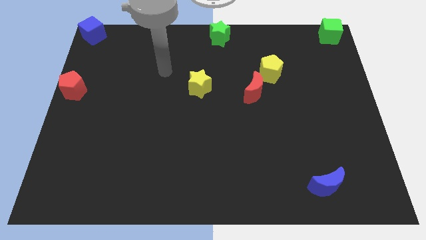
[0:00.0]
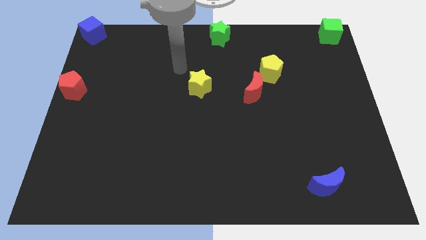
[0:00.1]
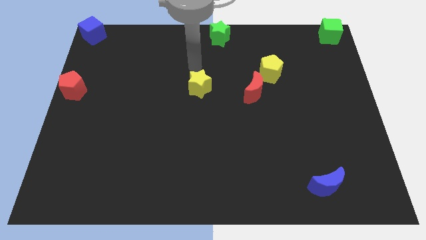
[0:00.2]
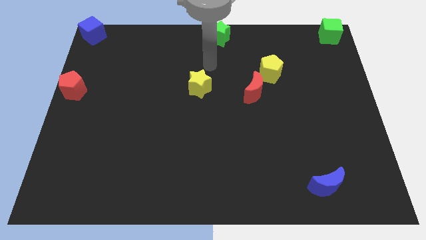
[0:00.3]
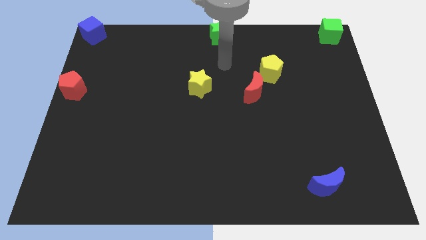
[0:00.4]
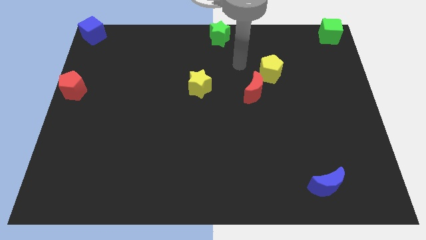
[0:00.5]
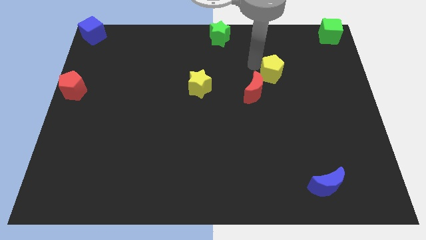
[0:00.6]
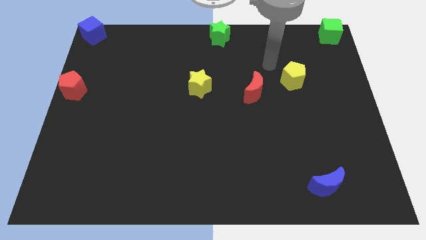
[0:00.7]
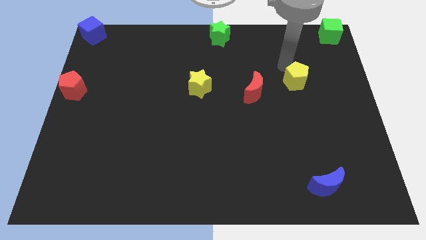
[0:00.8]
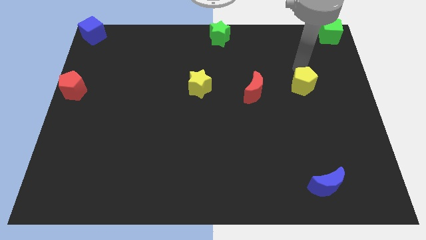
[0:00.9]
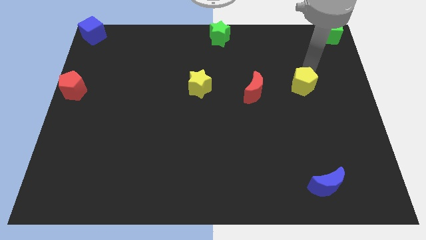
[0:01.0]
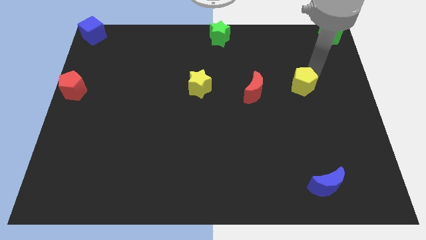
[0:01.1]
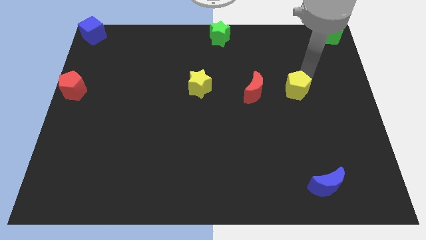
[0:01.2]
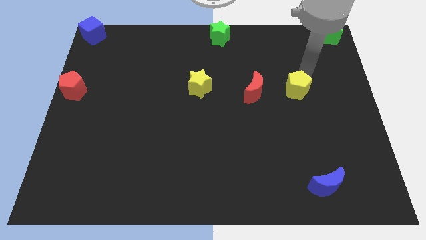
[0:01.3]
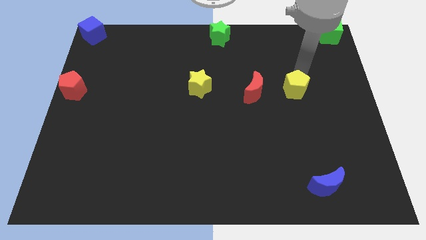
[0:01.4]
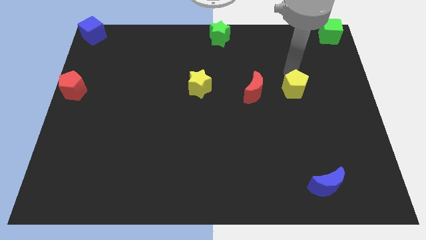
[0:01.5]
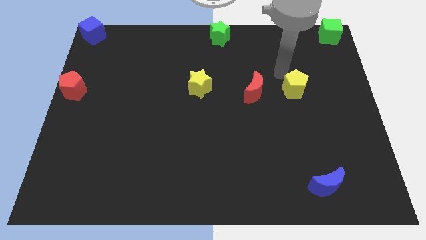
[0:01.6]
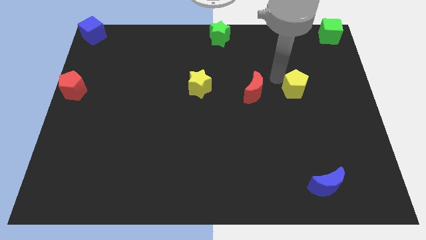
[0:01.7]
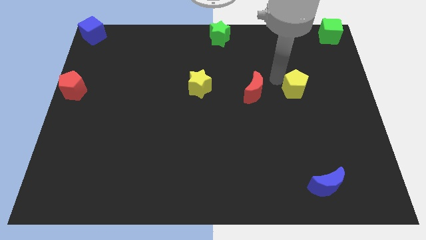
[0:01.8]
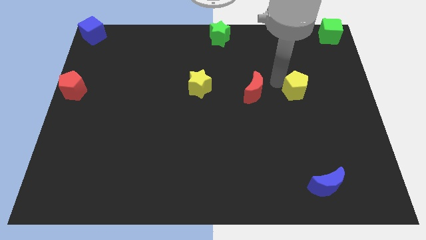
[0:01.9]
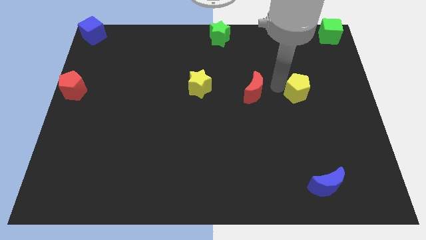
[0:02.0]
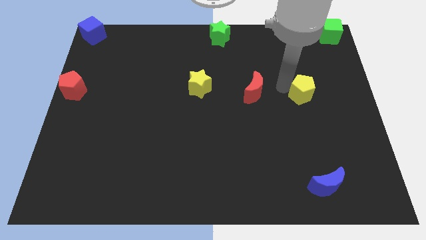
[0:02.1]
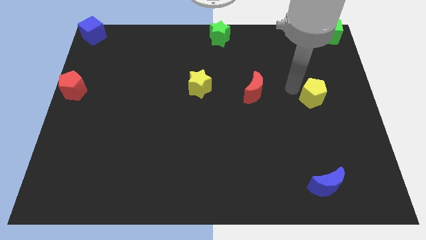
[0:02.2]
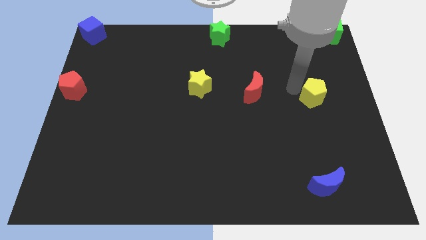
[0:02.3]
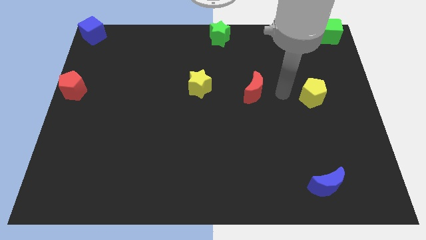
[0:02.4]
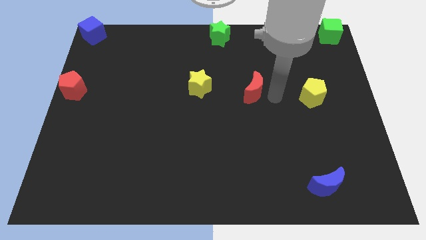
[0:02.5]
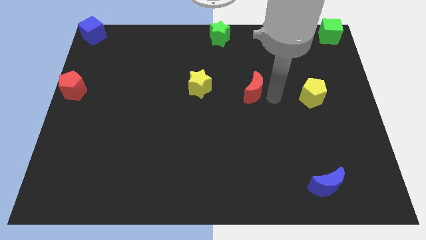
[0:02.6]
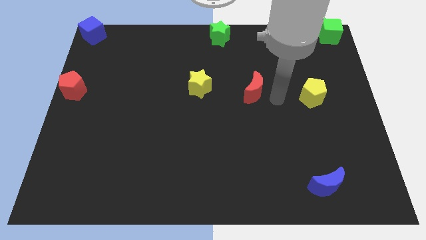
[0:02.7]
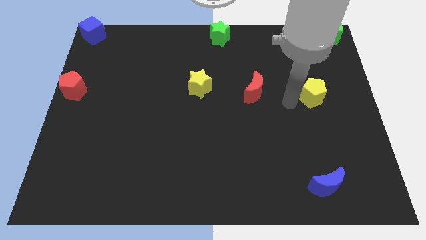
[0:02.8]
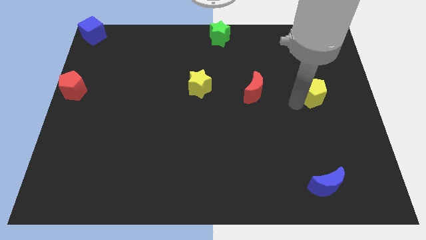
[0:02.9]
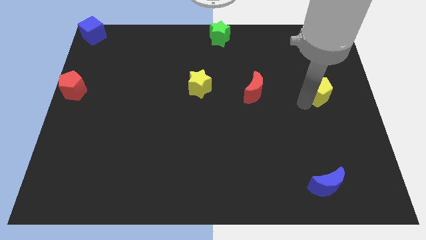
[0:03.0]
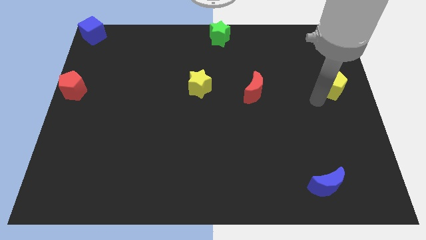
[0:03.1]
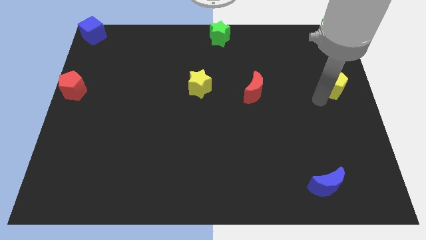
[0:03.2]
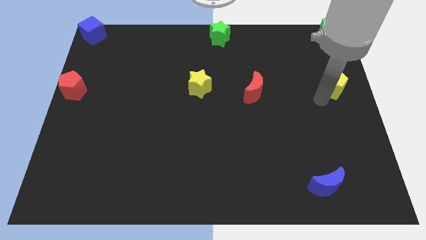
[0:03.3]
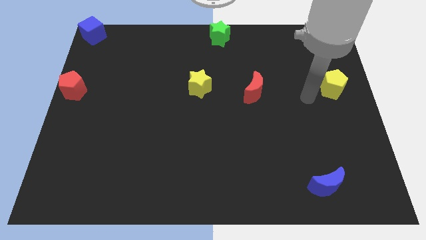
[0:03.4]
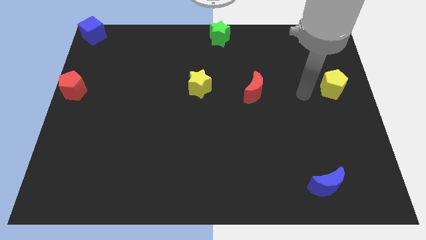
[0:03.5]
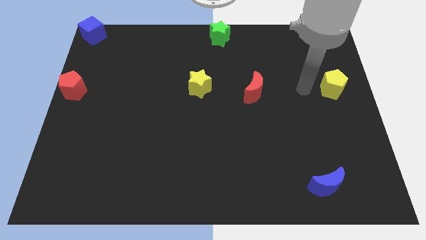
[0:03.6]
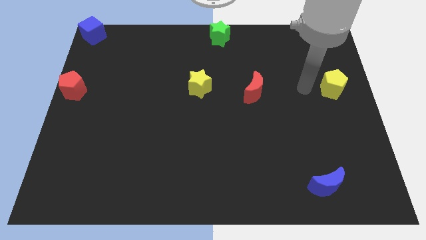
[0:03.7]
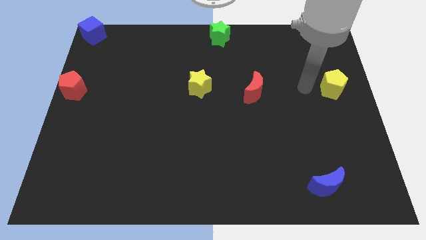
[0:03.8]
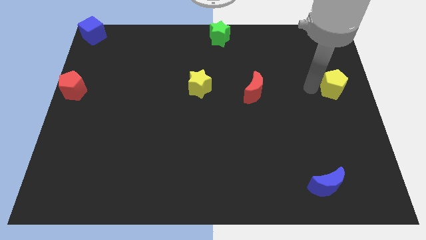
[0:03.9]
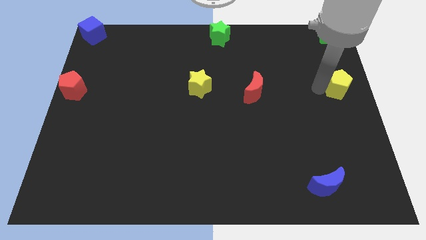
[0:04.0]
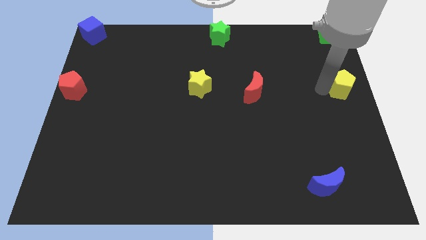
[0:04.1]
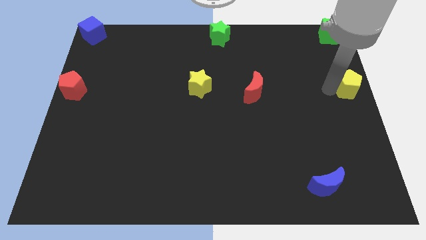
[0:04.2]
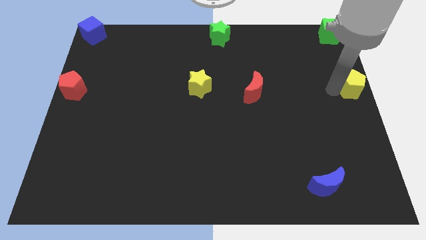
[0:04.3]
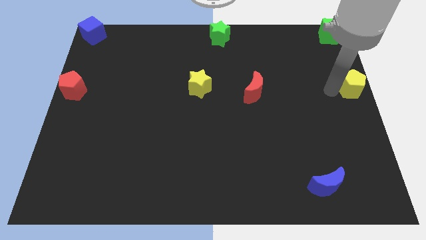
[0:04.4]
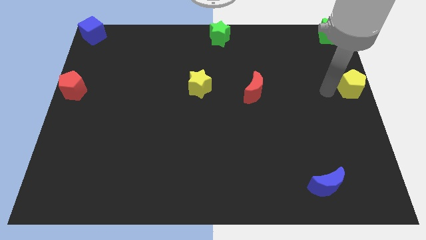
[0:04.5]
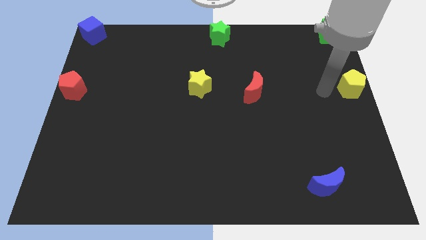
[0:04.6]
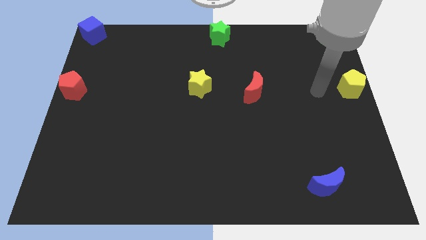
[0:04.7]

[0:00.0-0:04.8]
move the yellow pentagon to the center right of the board

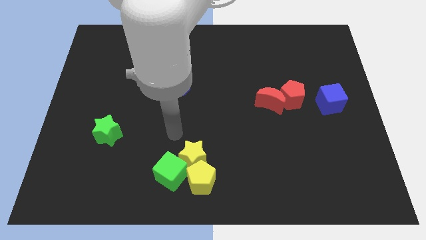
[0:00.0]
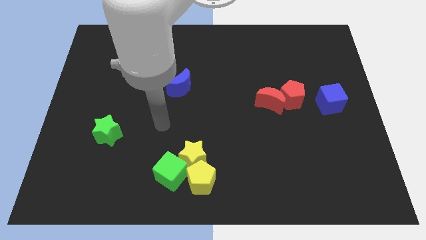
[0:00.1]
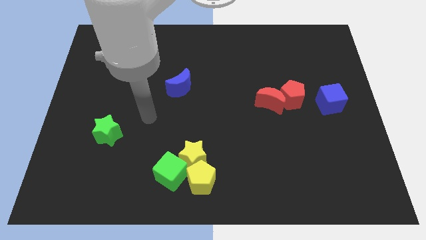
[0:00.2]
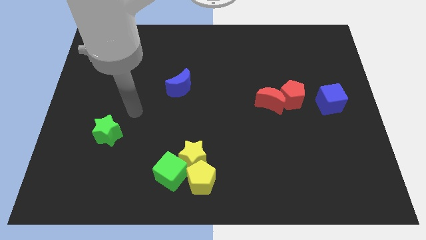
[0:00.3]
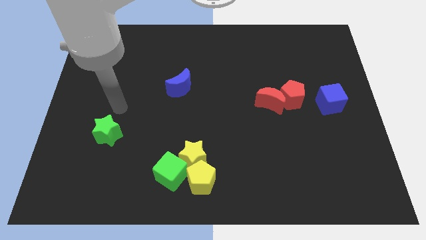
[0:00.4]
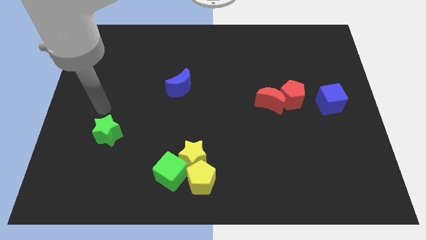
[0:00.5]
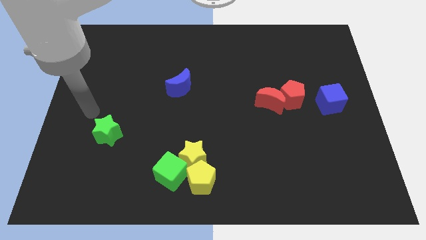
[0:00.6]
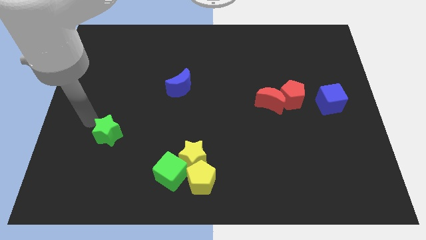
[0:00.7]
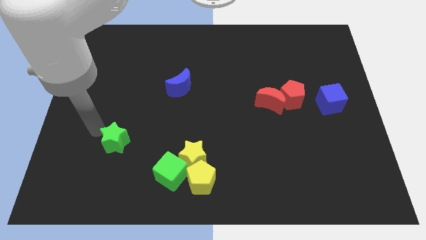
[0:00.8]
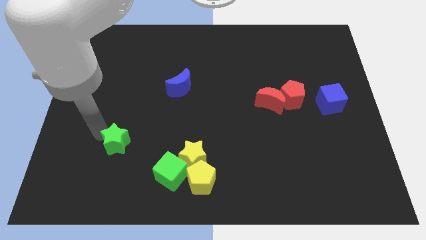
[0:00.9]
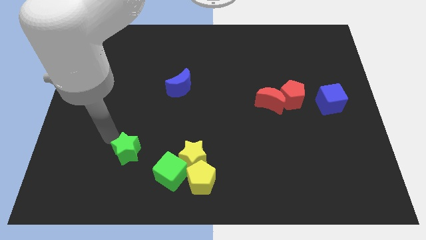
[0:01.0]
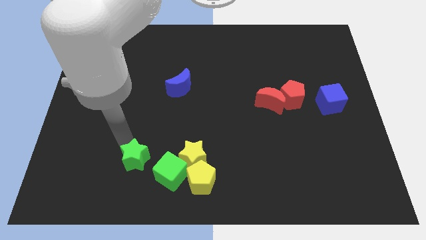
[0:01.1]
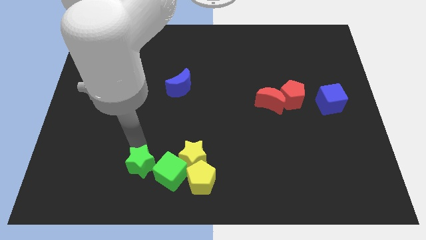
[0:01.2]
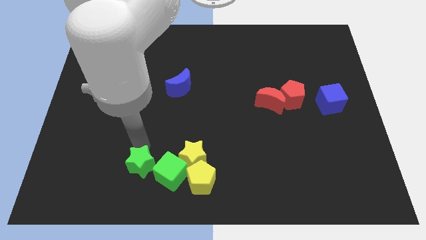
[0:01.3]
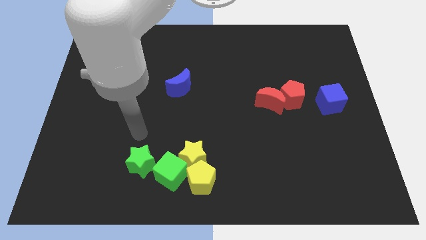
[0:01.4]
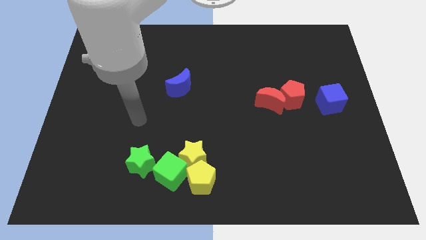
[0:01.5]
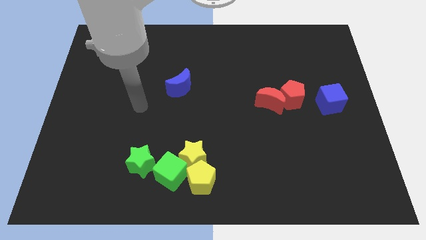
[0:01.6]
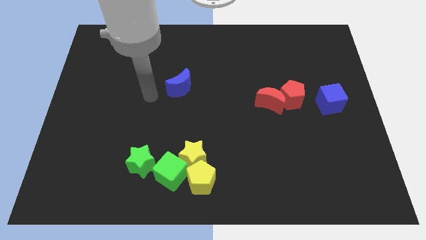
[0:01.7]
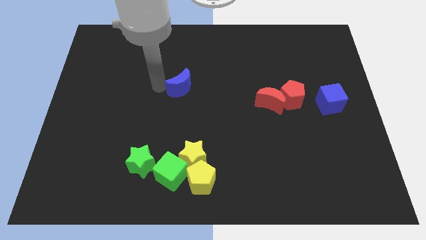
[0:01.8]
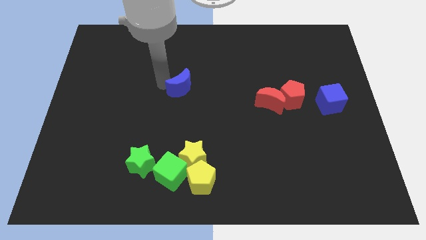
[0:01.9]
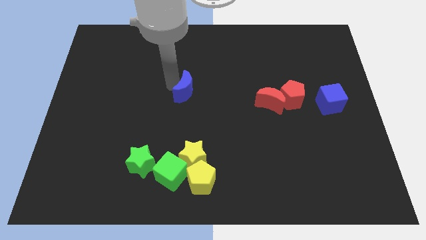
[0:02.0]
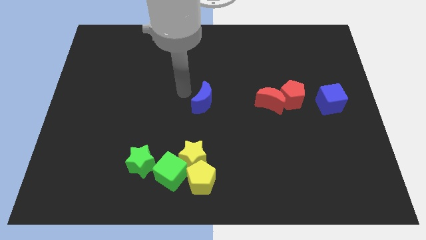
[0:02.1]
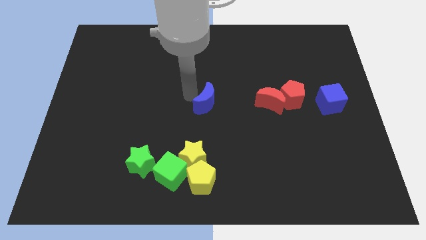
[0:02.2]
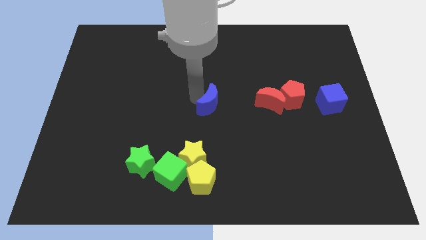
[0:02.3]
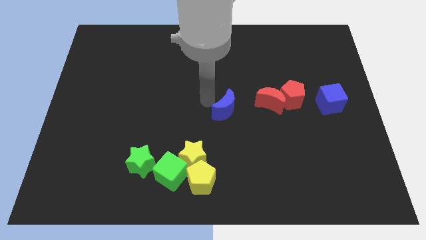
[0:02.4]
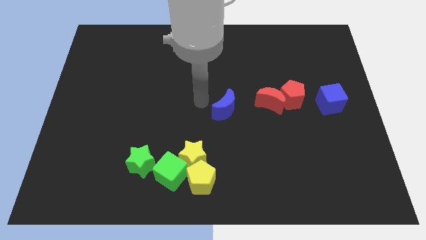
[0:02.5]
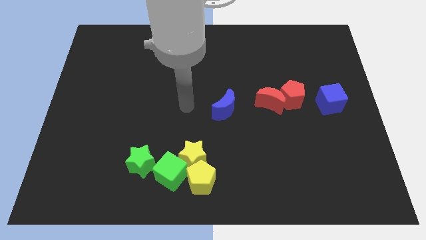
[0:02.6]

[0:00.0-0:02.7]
push green star and blue crescent to the right of the board

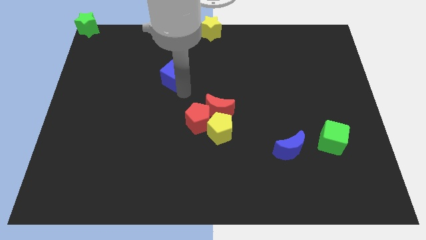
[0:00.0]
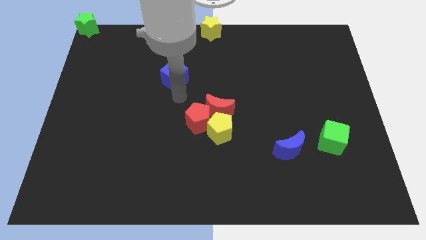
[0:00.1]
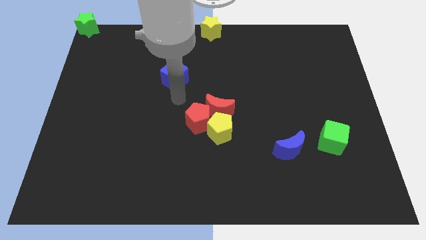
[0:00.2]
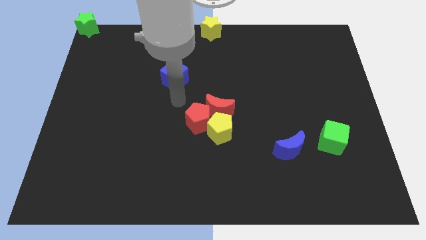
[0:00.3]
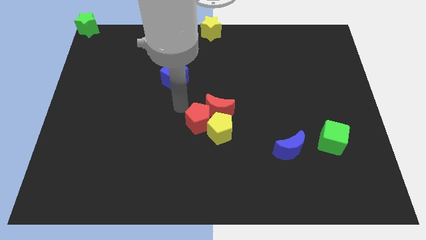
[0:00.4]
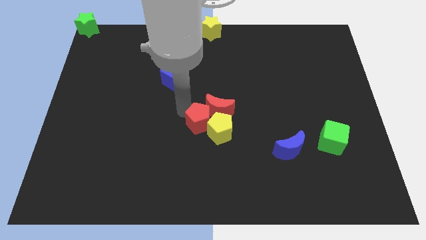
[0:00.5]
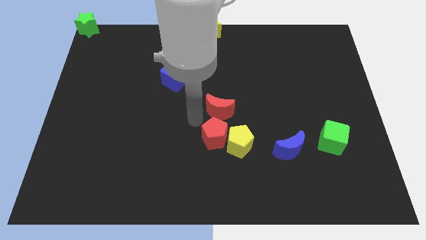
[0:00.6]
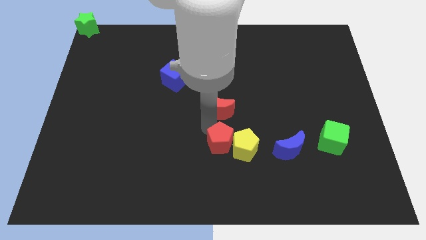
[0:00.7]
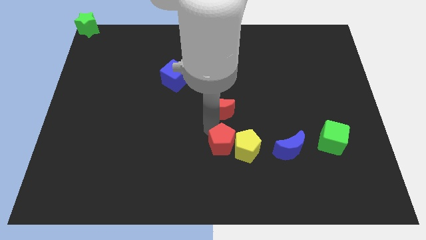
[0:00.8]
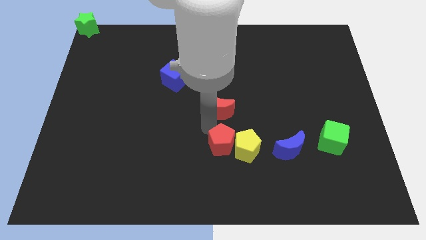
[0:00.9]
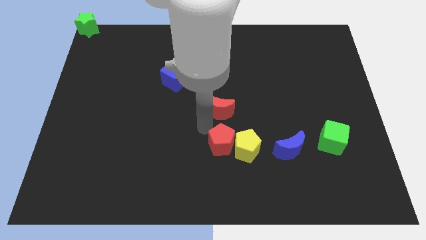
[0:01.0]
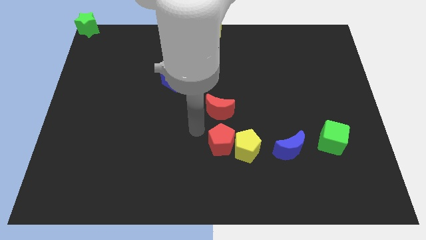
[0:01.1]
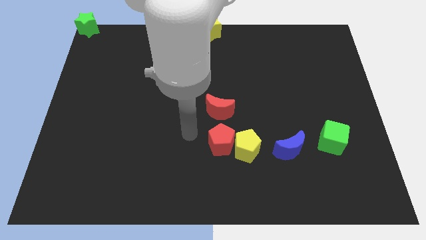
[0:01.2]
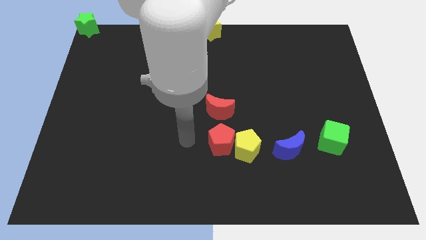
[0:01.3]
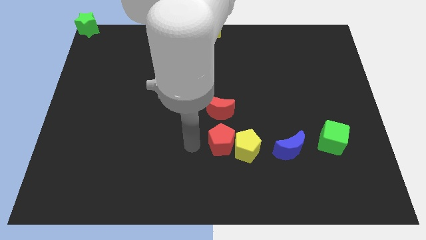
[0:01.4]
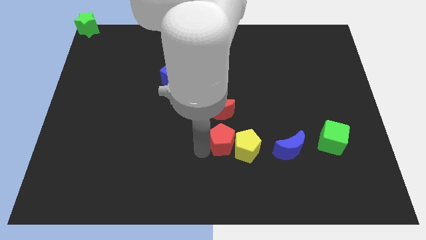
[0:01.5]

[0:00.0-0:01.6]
slide the red pentagon with yellow pentagon towards the blue crescent
